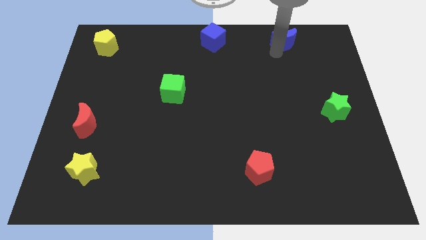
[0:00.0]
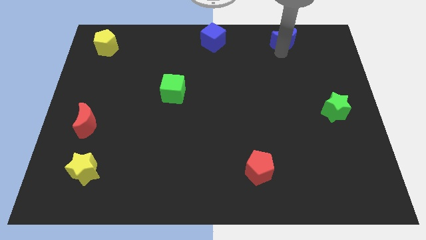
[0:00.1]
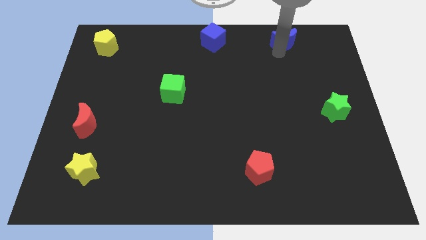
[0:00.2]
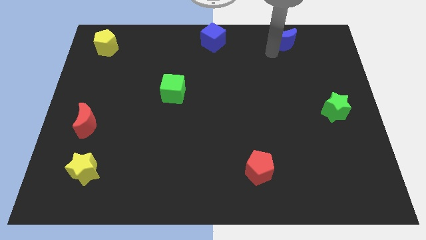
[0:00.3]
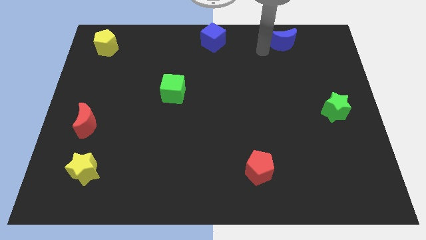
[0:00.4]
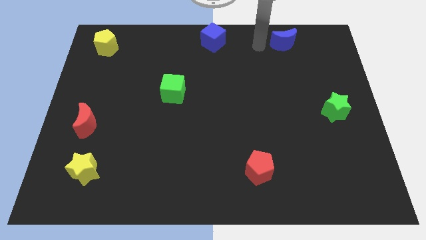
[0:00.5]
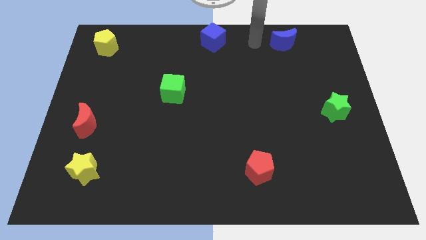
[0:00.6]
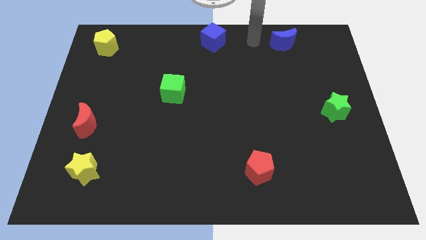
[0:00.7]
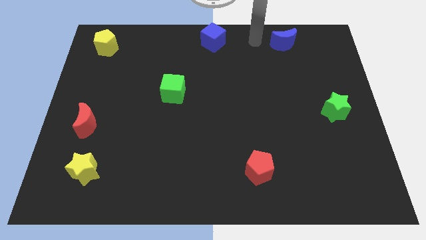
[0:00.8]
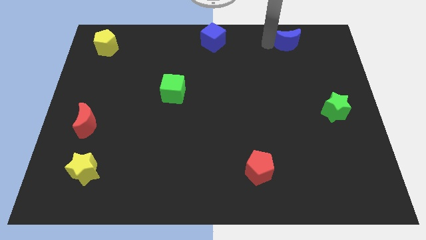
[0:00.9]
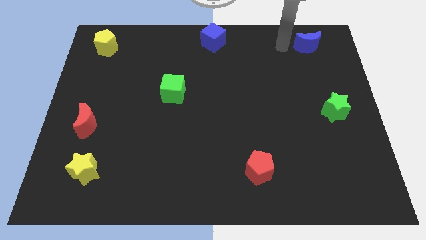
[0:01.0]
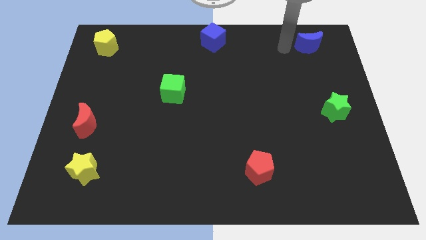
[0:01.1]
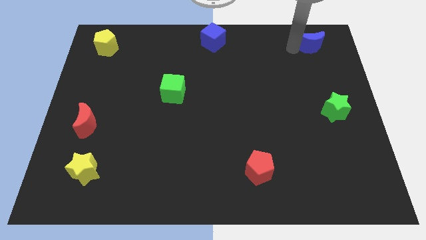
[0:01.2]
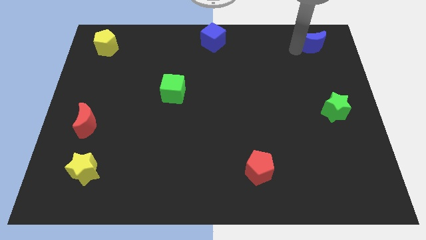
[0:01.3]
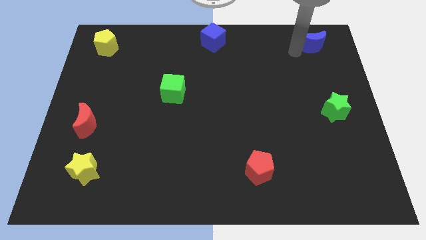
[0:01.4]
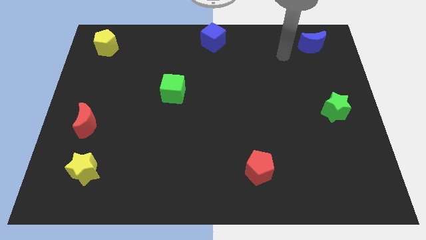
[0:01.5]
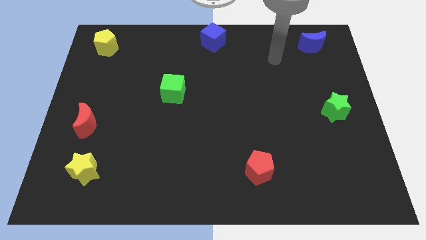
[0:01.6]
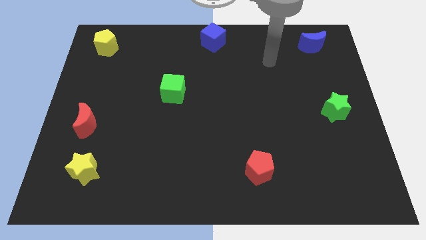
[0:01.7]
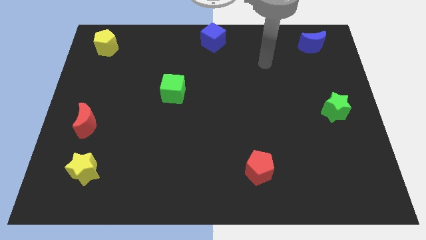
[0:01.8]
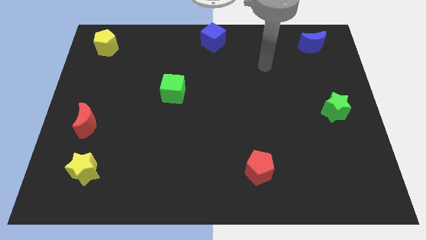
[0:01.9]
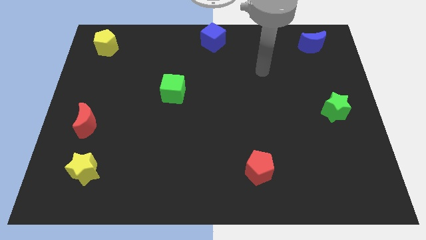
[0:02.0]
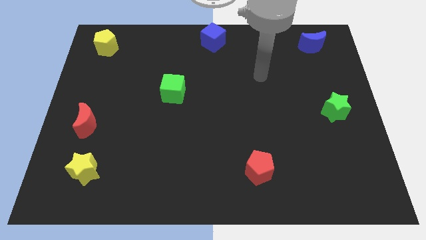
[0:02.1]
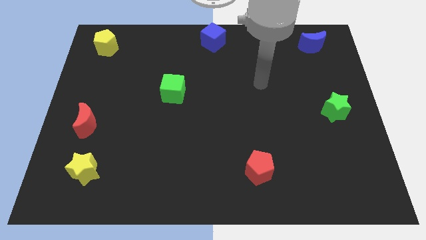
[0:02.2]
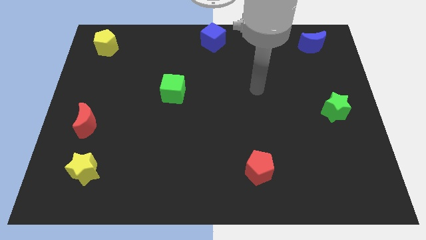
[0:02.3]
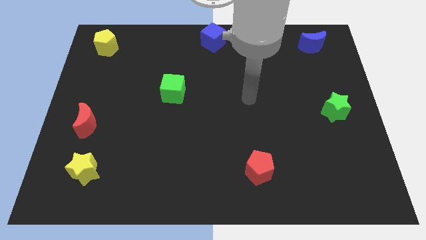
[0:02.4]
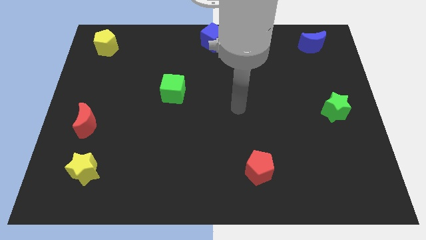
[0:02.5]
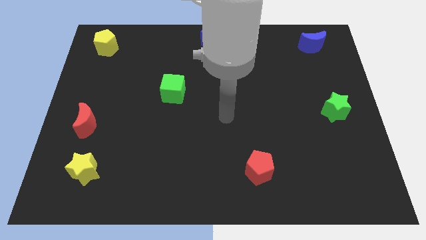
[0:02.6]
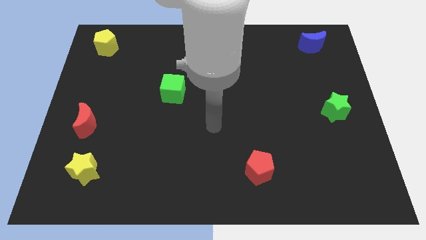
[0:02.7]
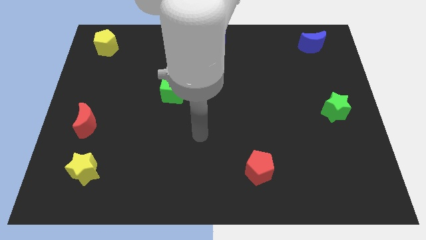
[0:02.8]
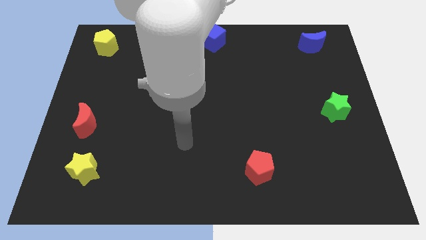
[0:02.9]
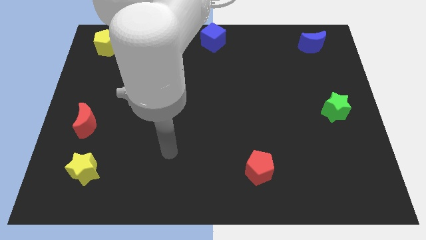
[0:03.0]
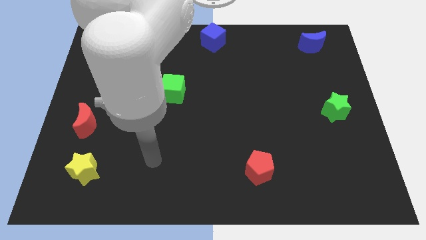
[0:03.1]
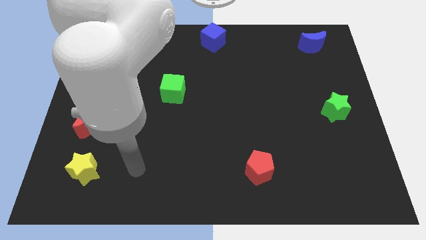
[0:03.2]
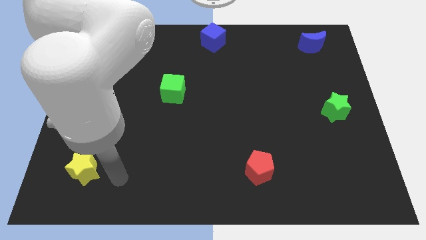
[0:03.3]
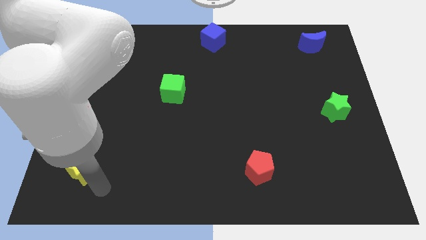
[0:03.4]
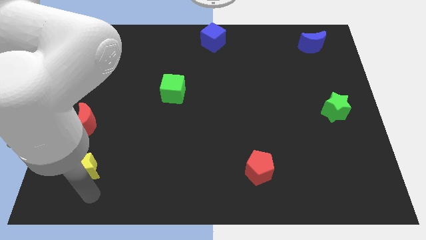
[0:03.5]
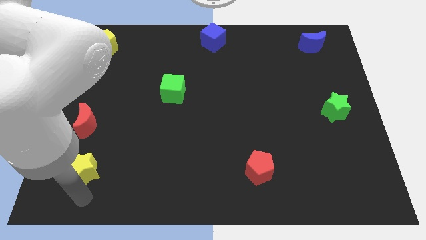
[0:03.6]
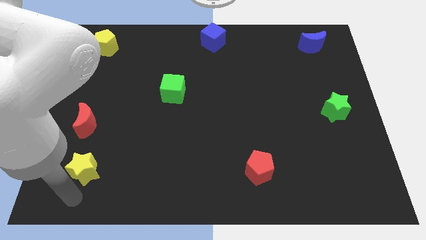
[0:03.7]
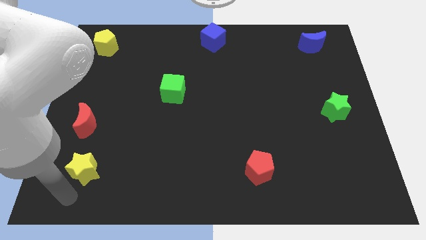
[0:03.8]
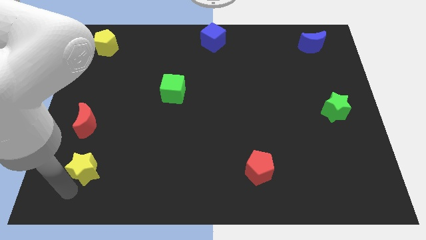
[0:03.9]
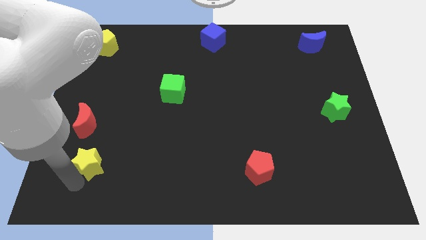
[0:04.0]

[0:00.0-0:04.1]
place your arm below yellow star

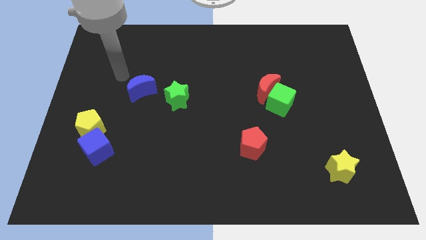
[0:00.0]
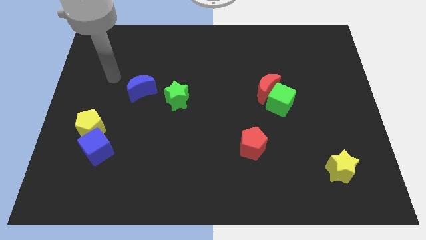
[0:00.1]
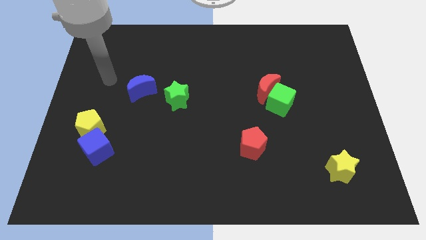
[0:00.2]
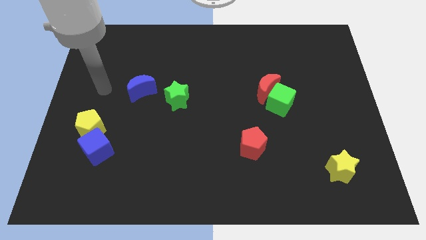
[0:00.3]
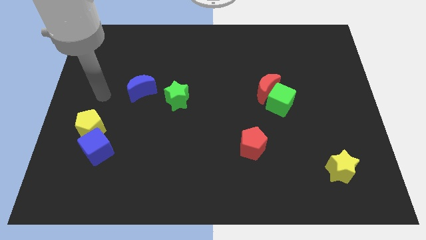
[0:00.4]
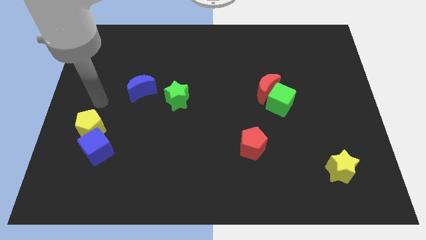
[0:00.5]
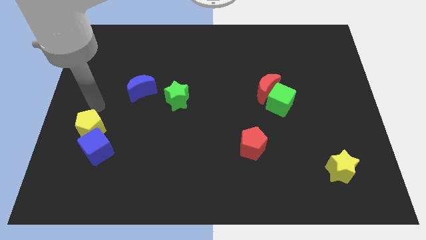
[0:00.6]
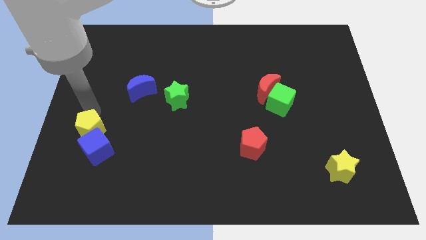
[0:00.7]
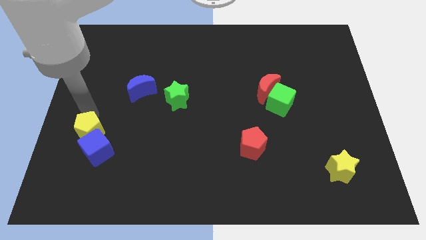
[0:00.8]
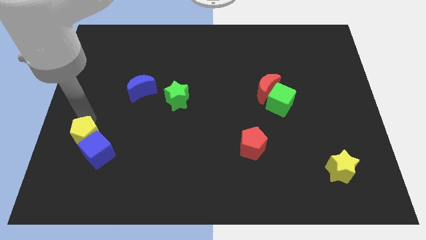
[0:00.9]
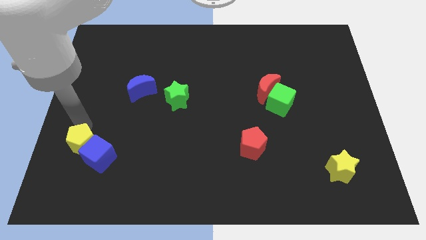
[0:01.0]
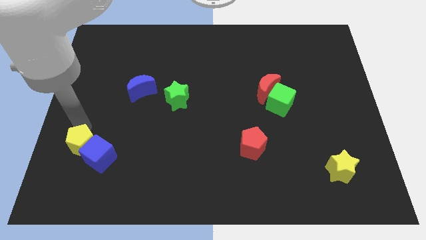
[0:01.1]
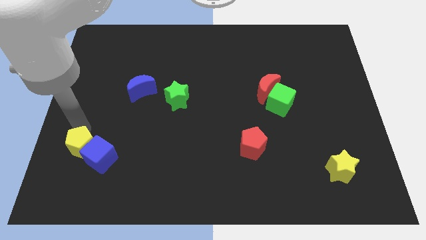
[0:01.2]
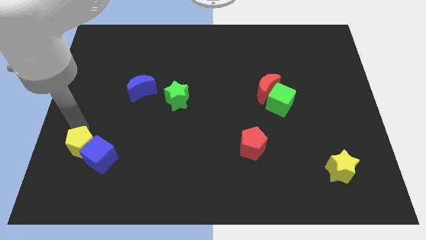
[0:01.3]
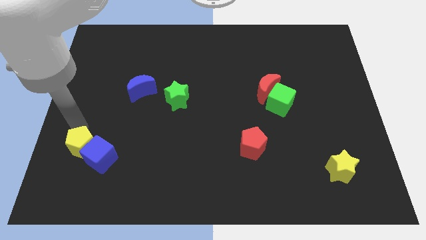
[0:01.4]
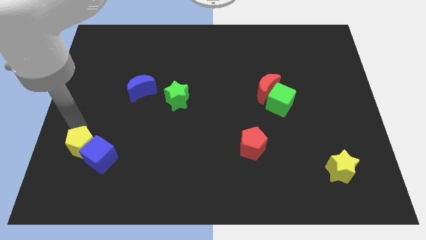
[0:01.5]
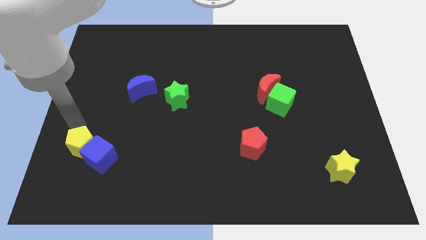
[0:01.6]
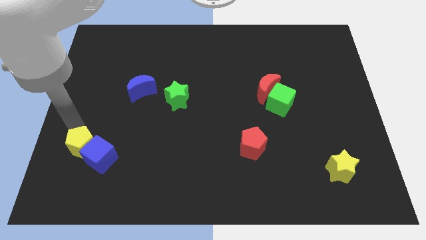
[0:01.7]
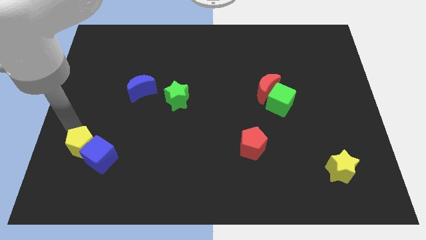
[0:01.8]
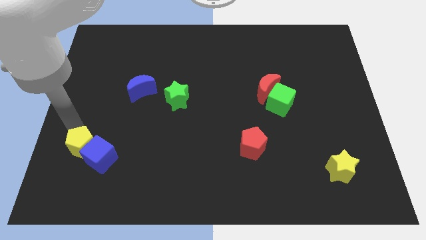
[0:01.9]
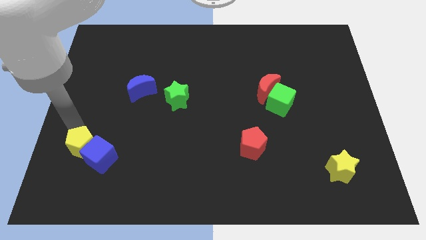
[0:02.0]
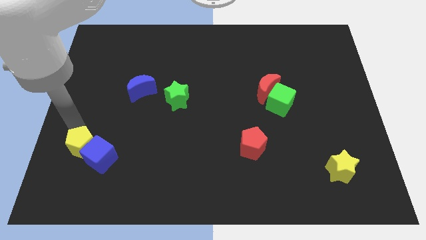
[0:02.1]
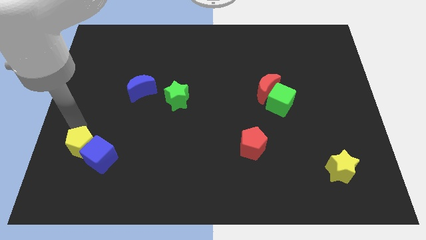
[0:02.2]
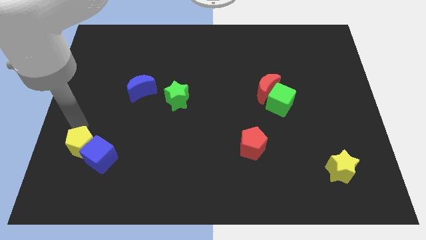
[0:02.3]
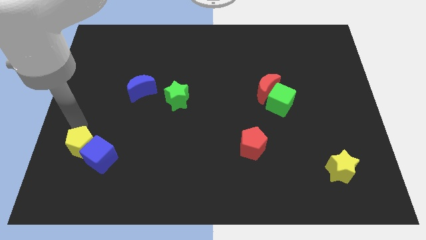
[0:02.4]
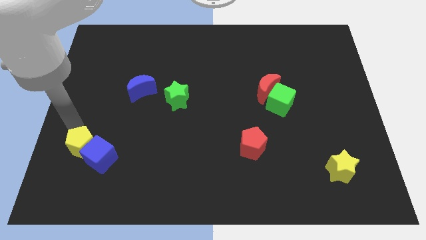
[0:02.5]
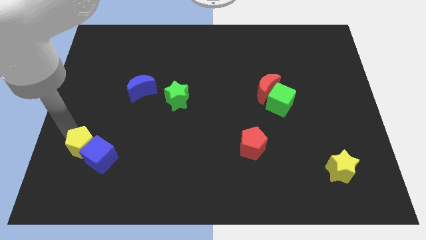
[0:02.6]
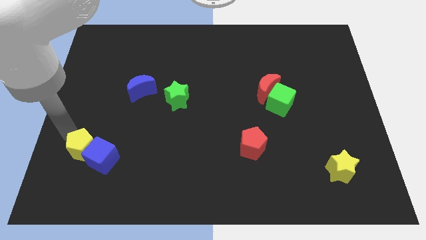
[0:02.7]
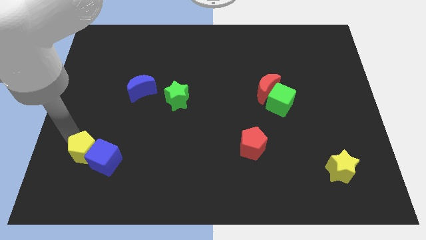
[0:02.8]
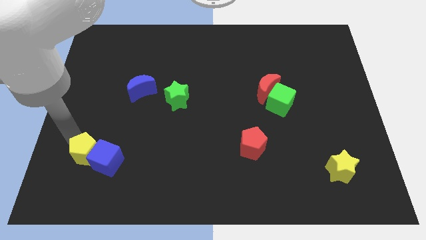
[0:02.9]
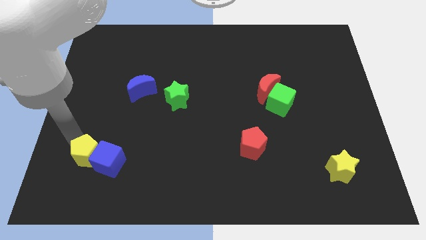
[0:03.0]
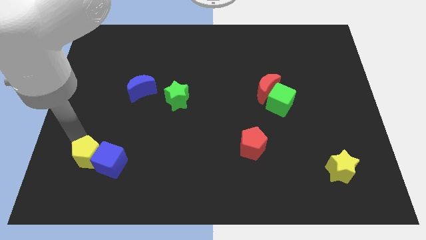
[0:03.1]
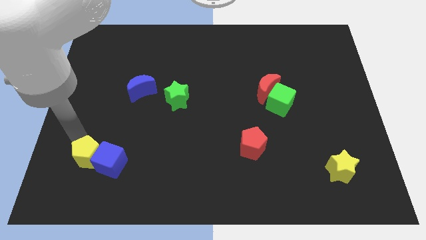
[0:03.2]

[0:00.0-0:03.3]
push the yellow pentagon along with blue cube towards the bottom of the board

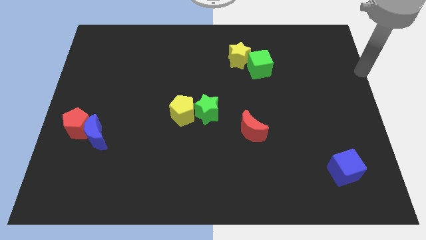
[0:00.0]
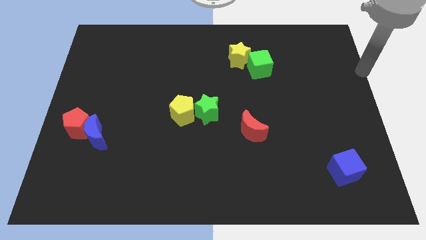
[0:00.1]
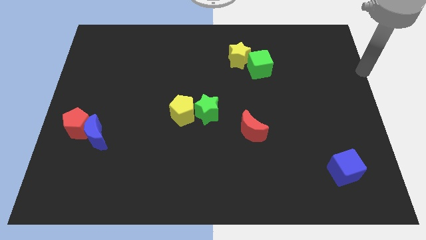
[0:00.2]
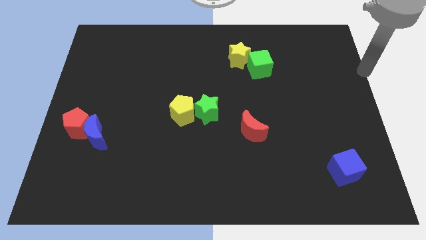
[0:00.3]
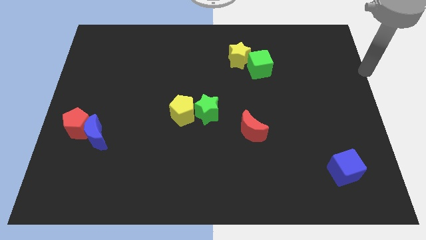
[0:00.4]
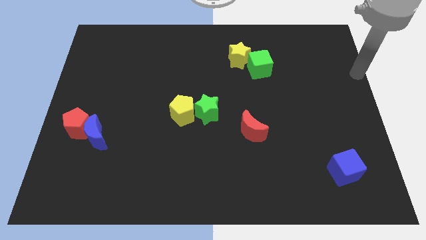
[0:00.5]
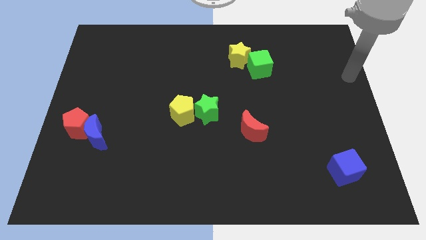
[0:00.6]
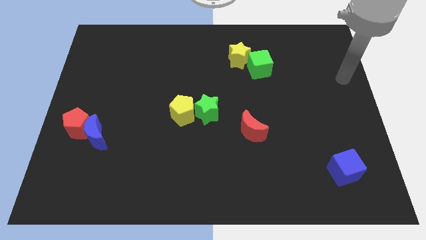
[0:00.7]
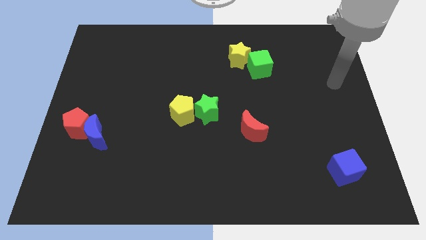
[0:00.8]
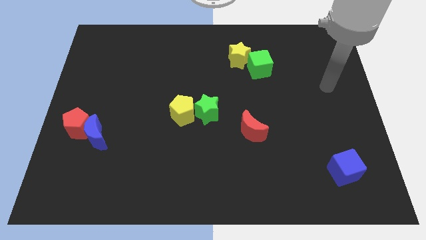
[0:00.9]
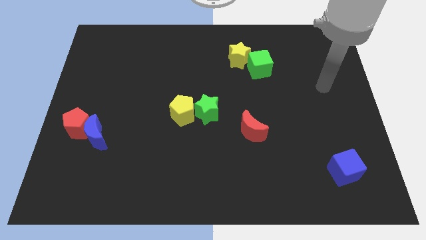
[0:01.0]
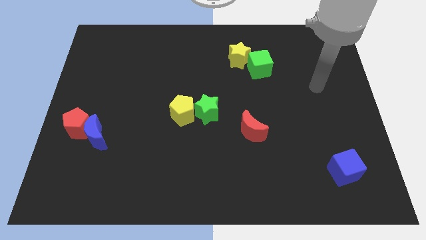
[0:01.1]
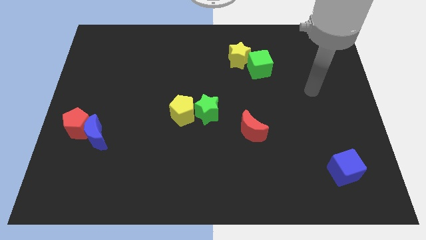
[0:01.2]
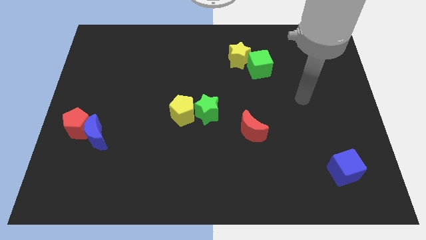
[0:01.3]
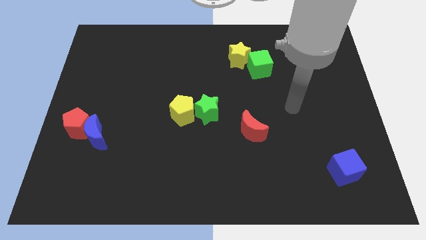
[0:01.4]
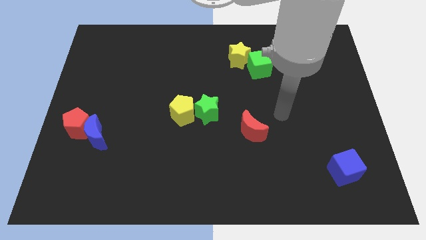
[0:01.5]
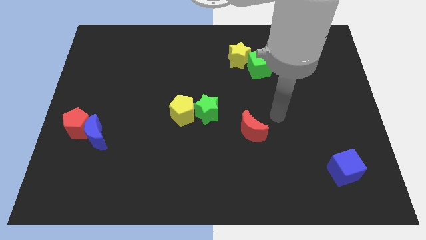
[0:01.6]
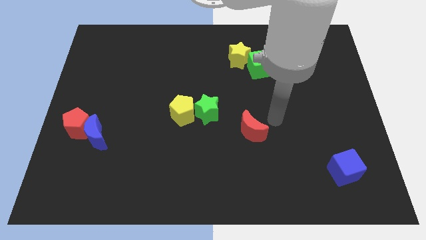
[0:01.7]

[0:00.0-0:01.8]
move the arm to the right of the green star
